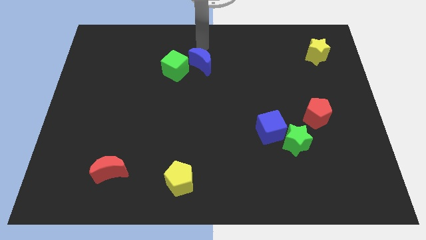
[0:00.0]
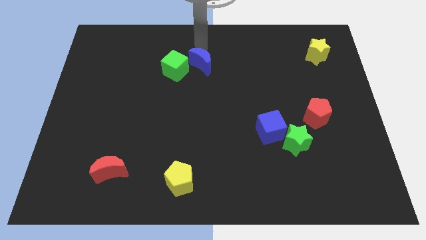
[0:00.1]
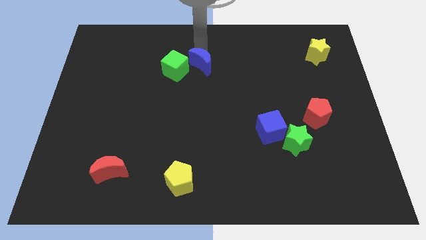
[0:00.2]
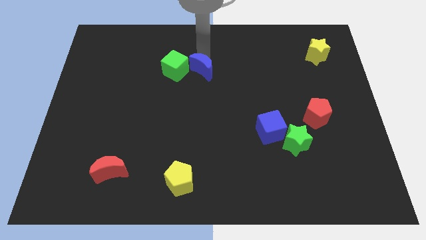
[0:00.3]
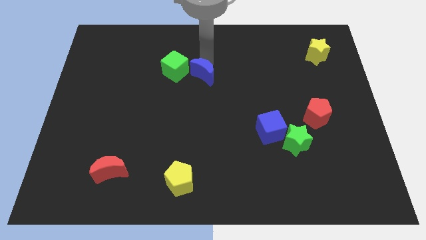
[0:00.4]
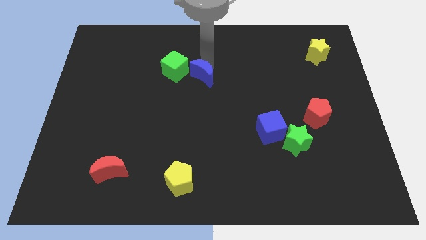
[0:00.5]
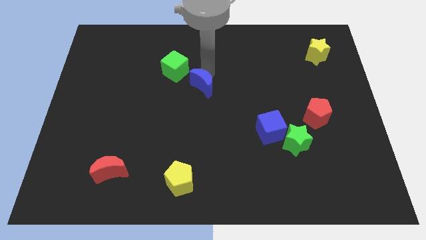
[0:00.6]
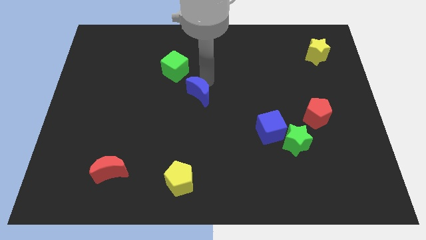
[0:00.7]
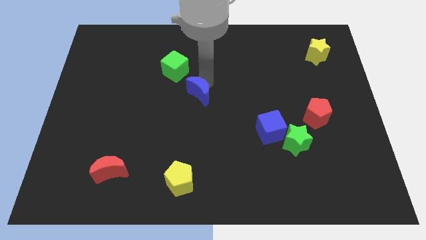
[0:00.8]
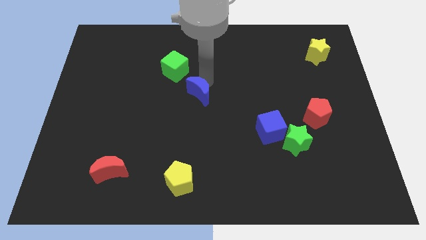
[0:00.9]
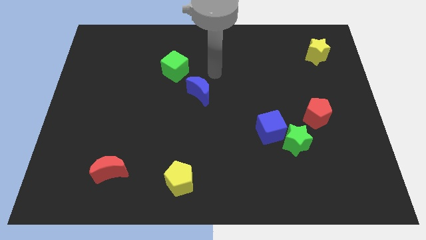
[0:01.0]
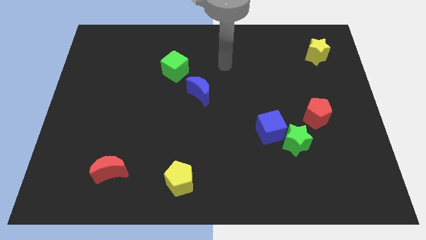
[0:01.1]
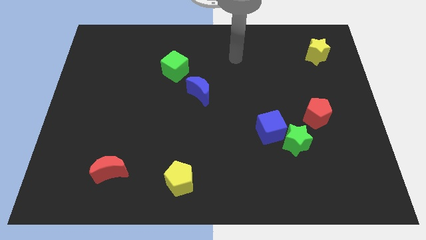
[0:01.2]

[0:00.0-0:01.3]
slide the blue crescent slightly towards down

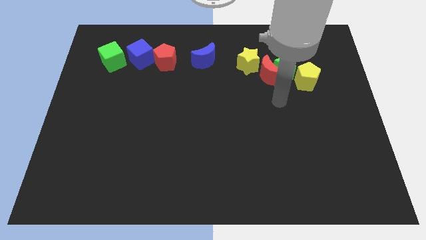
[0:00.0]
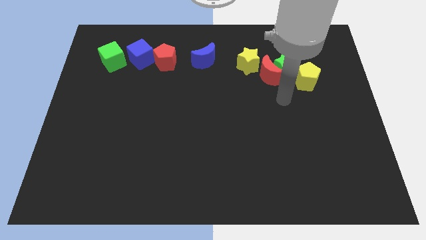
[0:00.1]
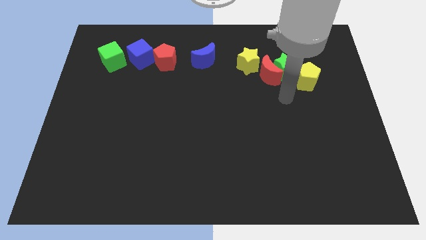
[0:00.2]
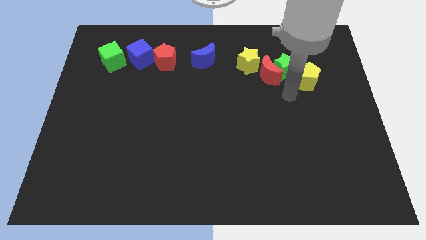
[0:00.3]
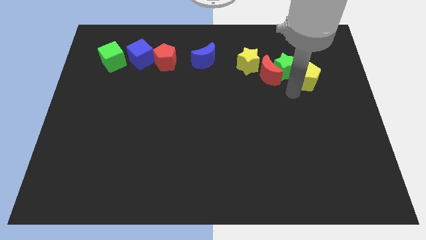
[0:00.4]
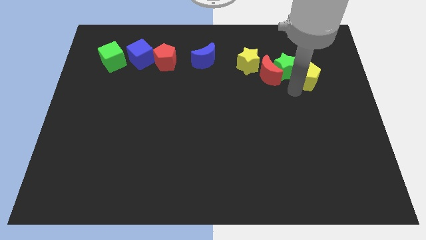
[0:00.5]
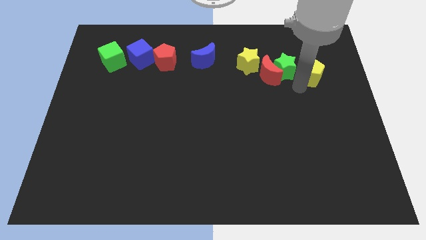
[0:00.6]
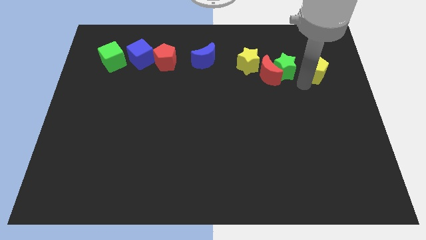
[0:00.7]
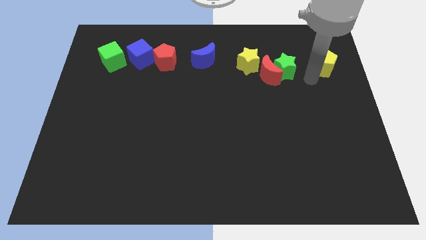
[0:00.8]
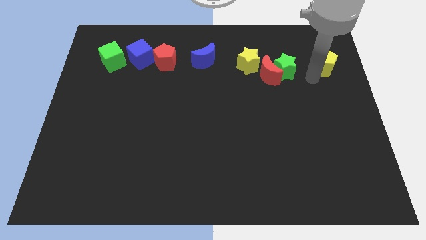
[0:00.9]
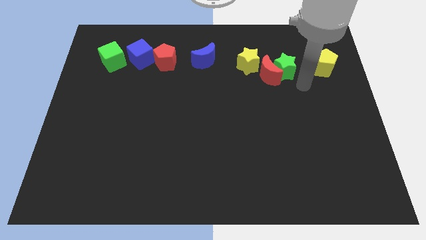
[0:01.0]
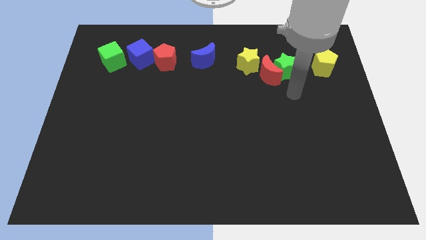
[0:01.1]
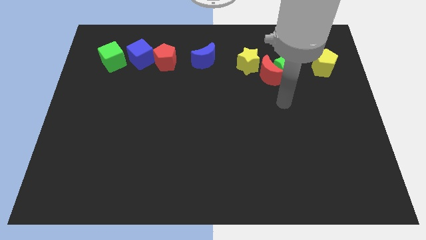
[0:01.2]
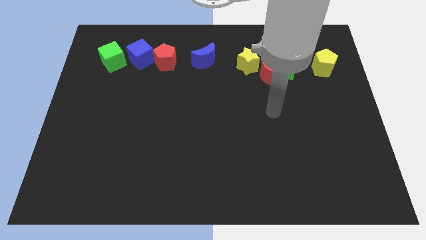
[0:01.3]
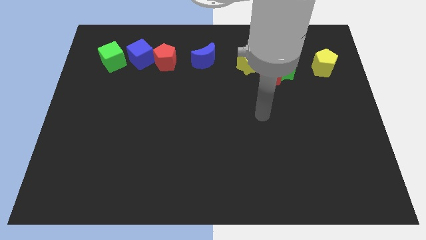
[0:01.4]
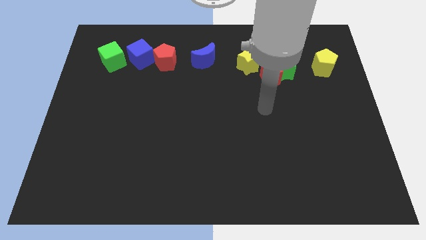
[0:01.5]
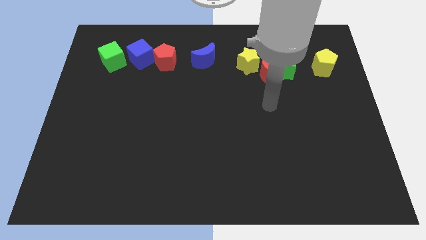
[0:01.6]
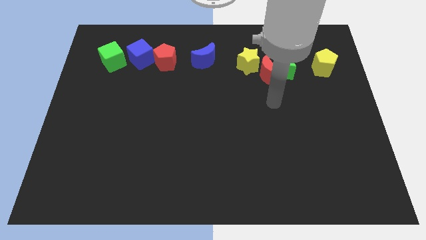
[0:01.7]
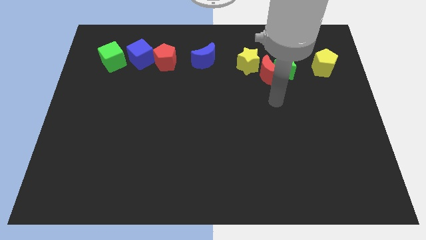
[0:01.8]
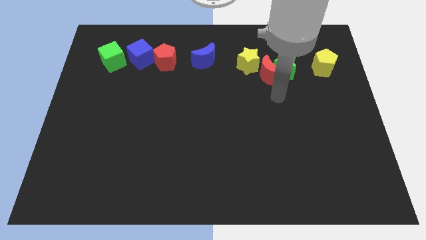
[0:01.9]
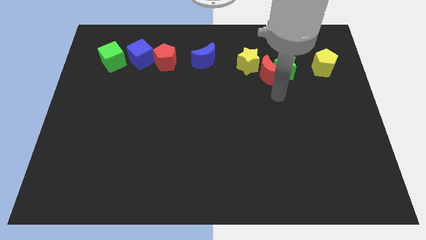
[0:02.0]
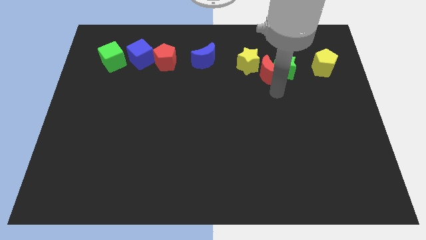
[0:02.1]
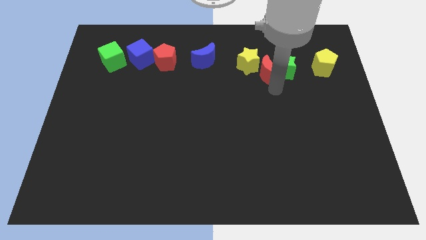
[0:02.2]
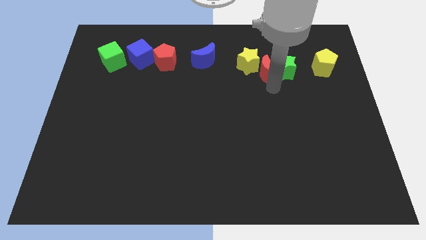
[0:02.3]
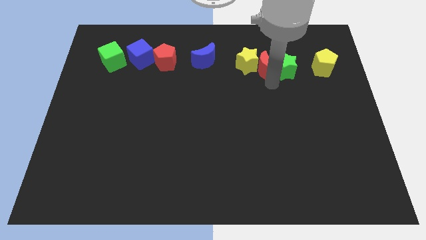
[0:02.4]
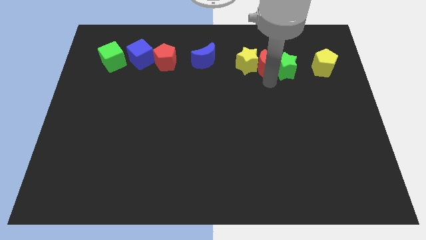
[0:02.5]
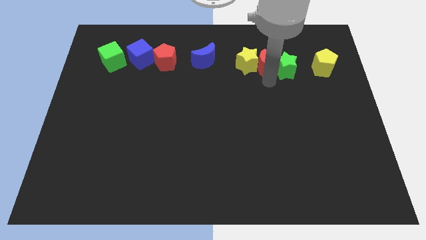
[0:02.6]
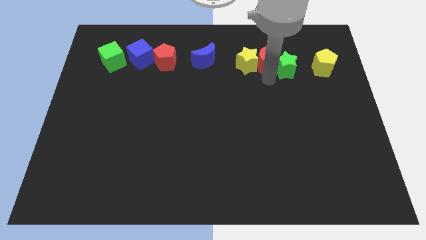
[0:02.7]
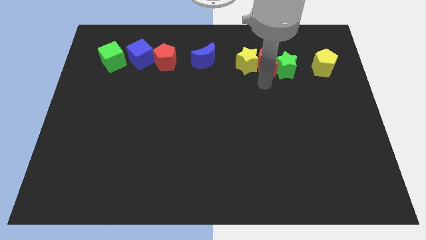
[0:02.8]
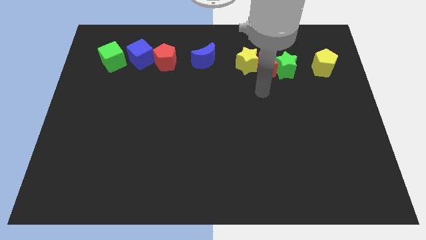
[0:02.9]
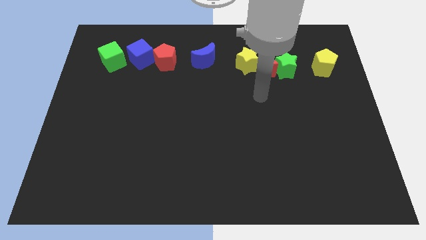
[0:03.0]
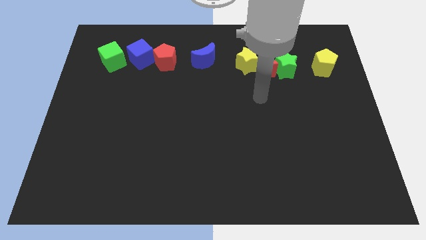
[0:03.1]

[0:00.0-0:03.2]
adjust the yellow pentagon and red moon into the horizontal line of blocks

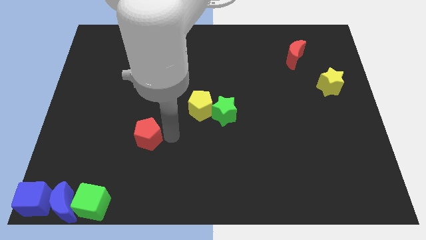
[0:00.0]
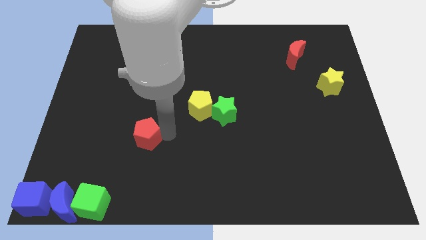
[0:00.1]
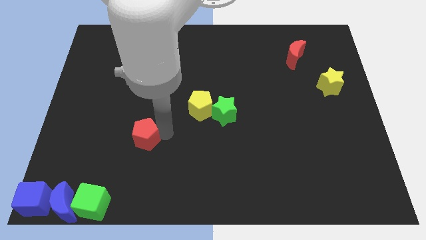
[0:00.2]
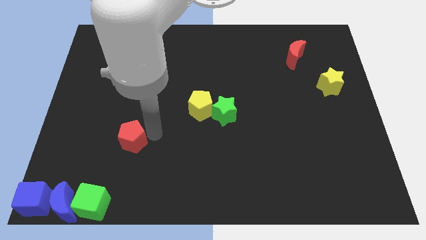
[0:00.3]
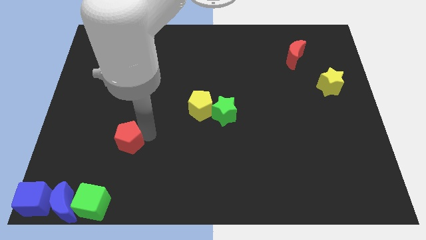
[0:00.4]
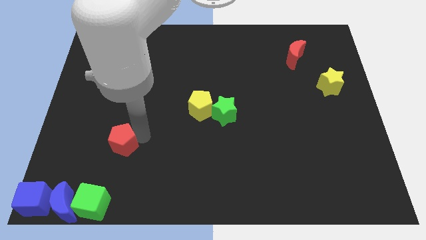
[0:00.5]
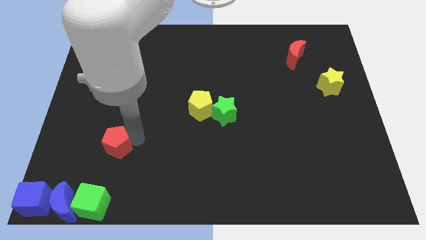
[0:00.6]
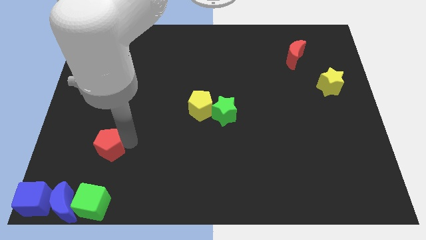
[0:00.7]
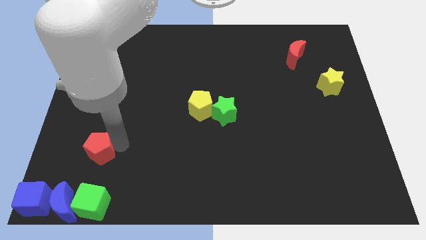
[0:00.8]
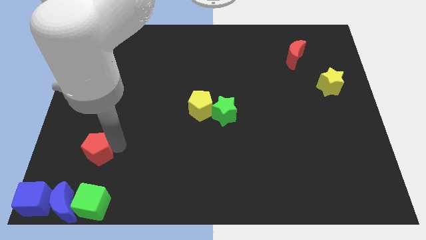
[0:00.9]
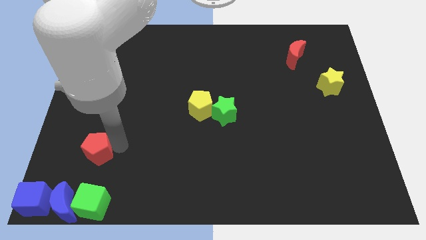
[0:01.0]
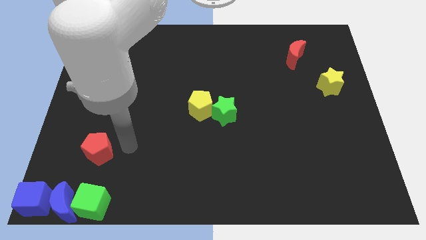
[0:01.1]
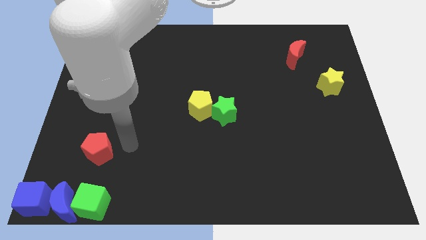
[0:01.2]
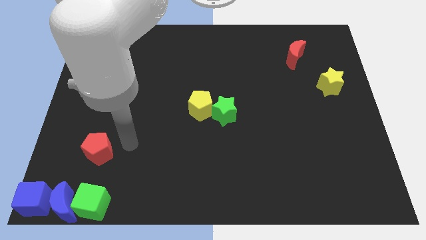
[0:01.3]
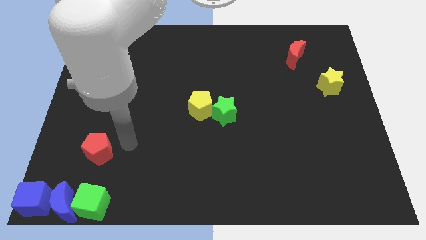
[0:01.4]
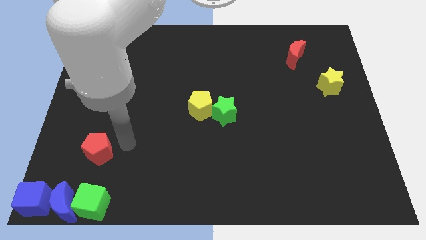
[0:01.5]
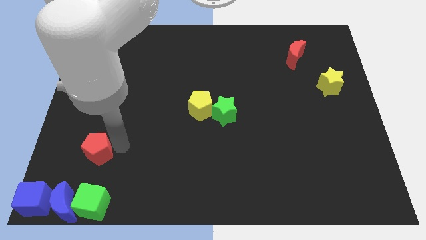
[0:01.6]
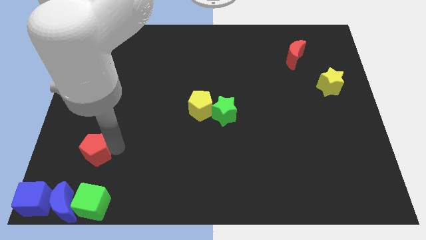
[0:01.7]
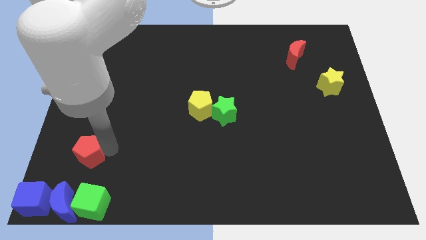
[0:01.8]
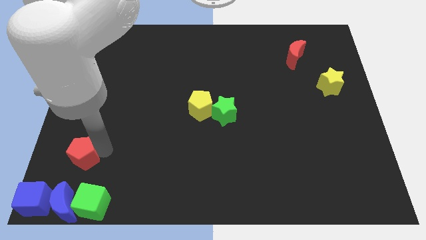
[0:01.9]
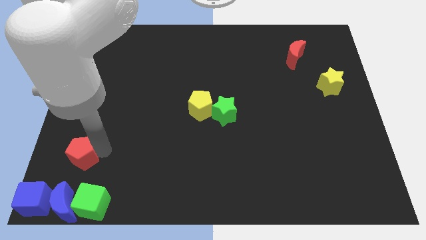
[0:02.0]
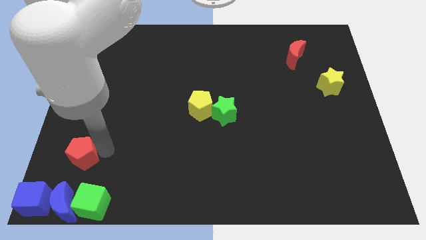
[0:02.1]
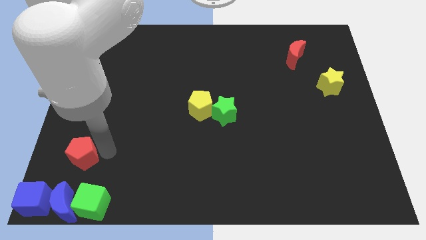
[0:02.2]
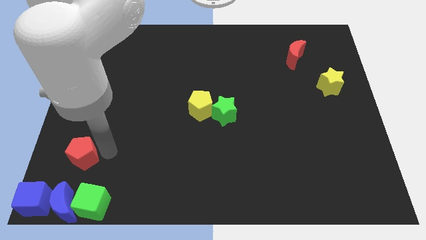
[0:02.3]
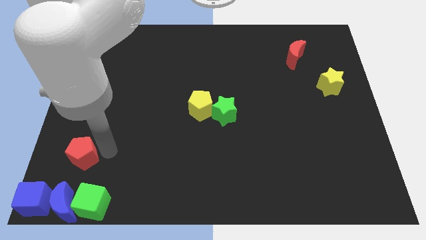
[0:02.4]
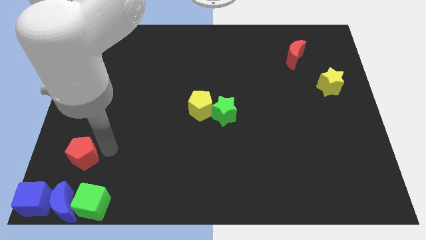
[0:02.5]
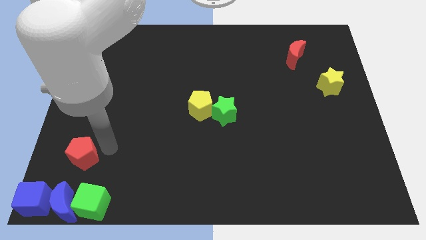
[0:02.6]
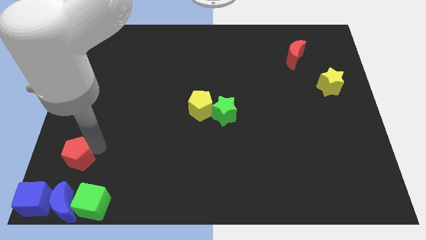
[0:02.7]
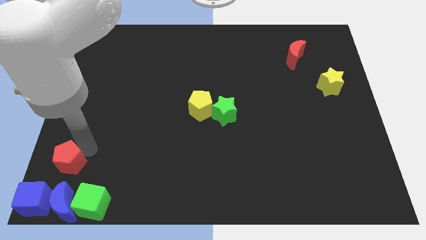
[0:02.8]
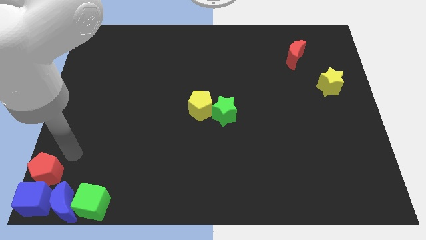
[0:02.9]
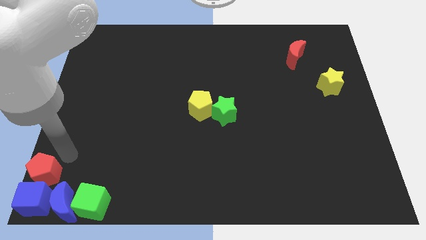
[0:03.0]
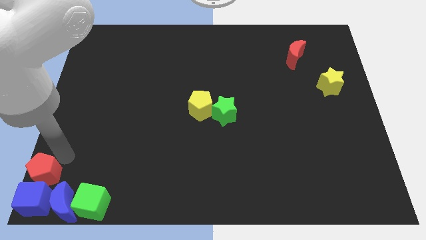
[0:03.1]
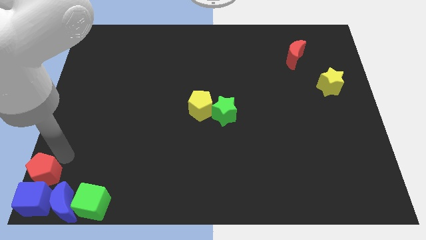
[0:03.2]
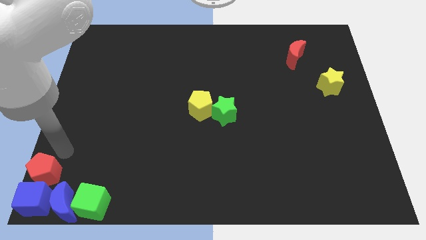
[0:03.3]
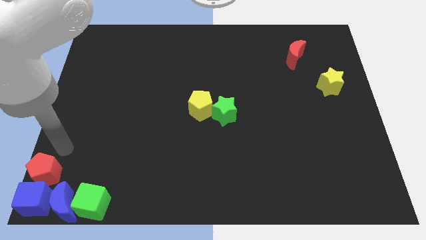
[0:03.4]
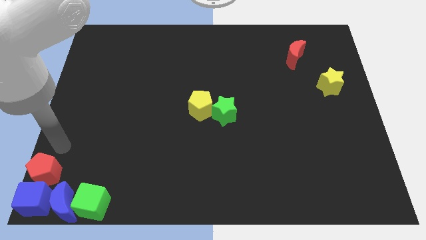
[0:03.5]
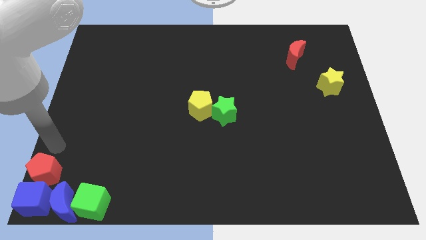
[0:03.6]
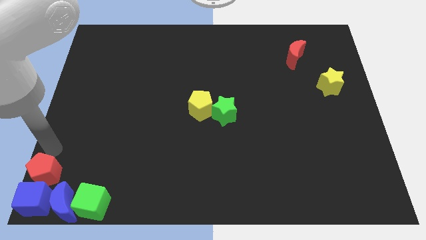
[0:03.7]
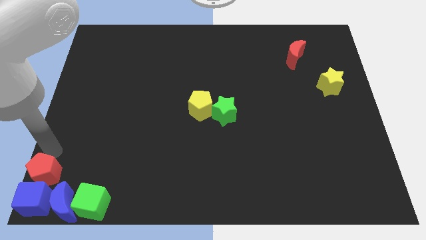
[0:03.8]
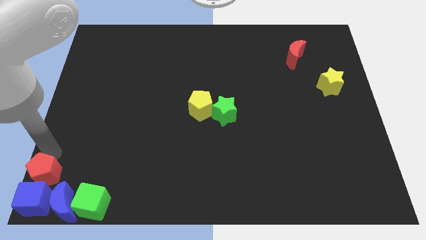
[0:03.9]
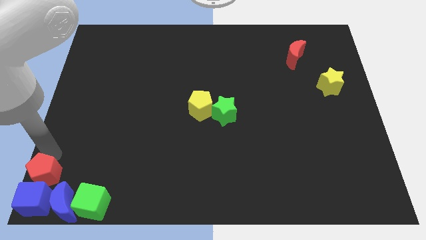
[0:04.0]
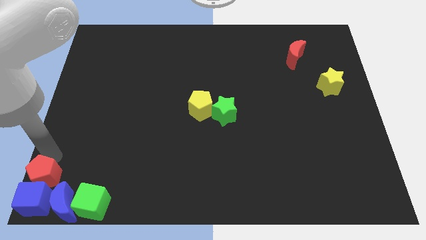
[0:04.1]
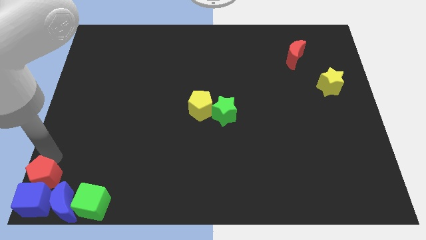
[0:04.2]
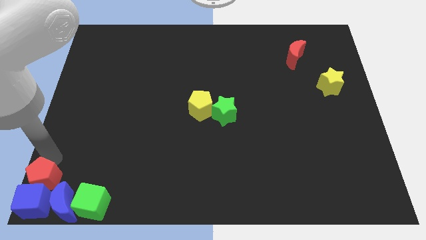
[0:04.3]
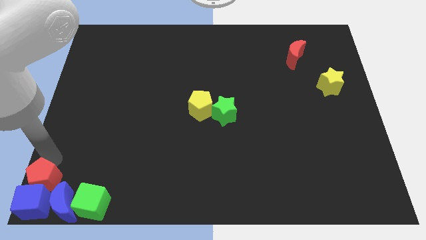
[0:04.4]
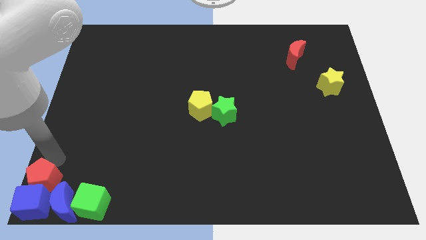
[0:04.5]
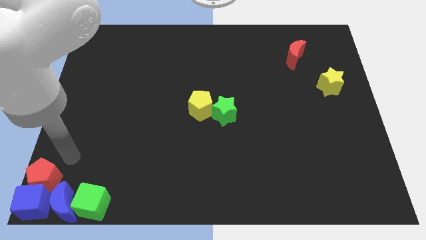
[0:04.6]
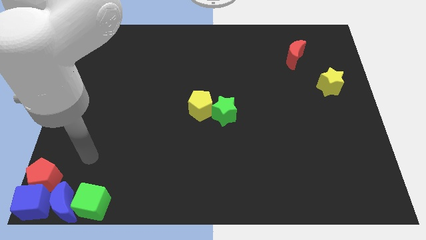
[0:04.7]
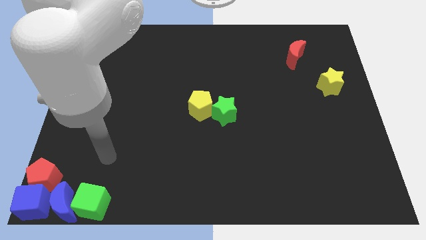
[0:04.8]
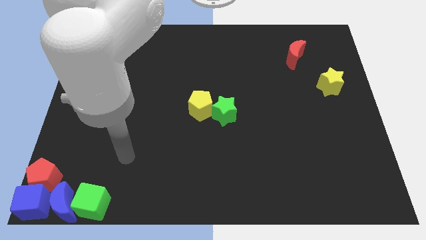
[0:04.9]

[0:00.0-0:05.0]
move the red pentagon towards the bottom left
